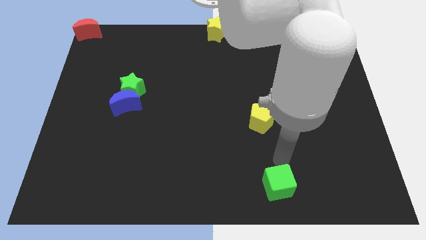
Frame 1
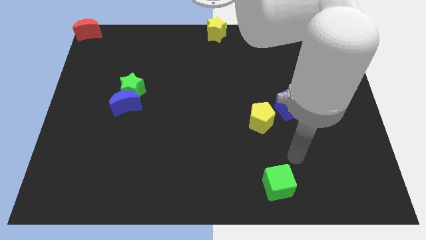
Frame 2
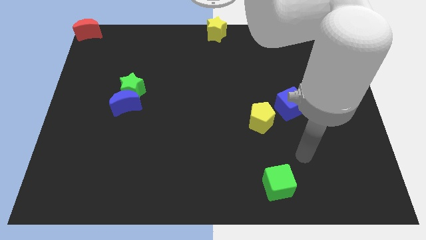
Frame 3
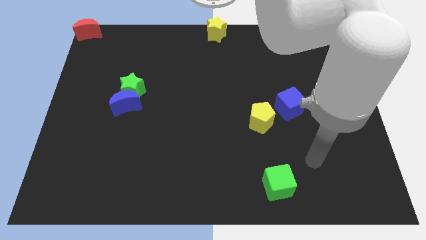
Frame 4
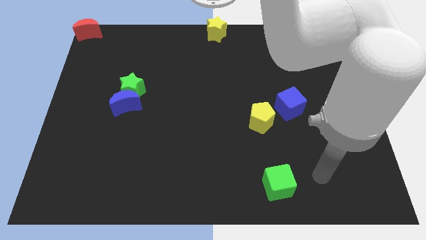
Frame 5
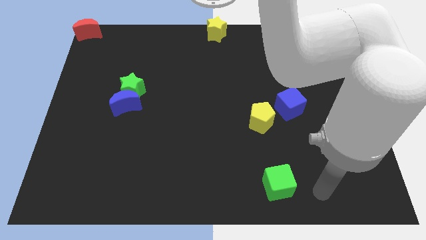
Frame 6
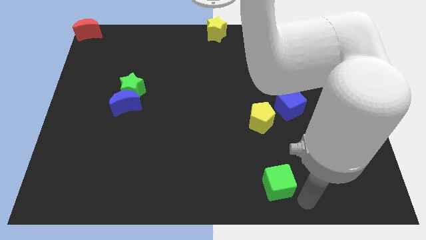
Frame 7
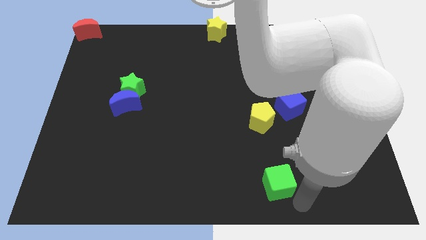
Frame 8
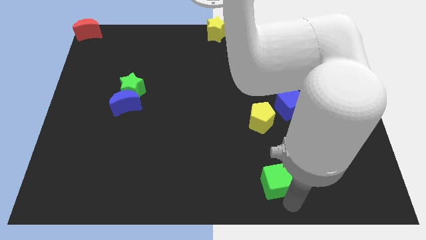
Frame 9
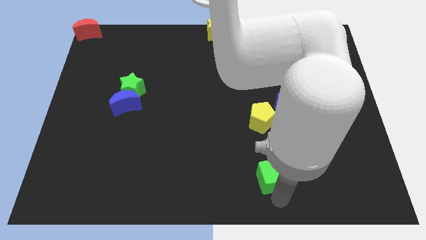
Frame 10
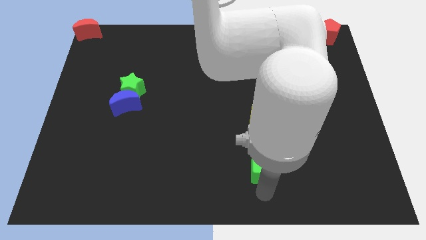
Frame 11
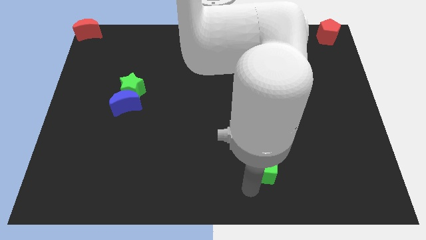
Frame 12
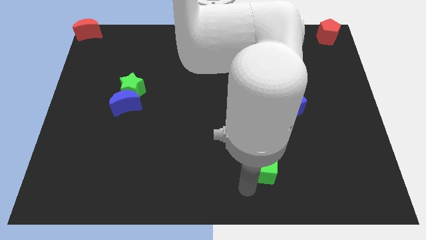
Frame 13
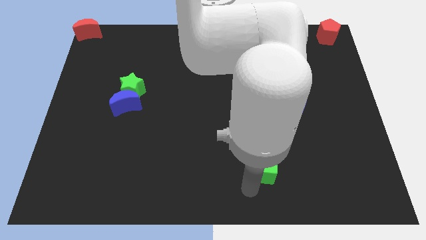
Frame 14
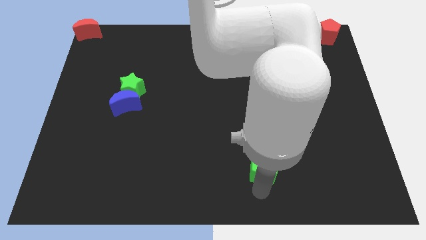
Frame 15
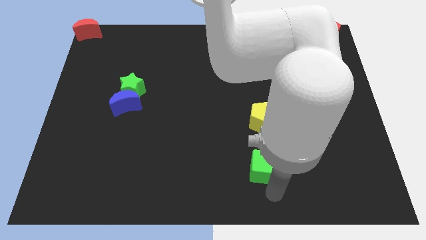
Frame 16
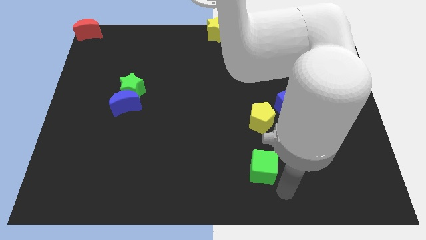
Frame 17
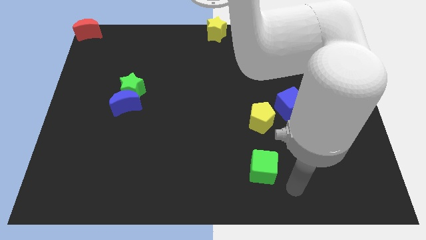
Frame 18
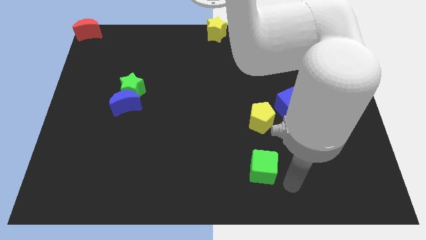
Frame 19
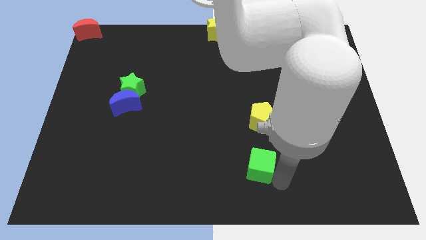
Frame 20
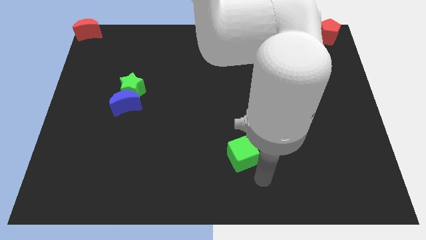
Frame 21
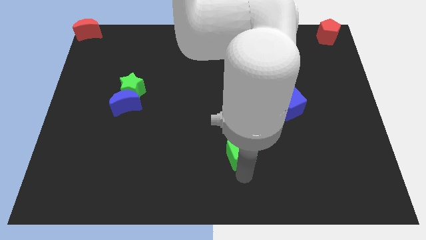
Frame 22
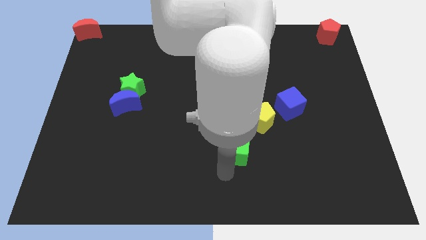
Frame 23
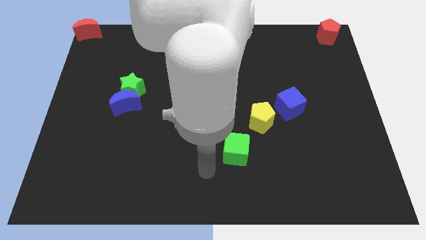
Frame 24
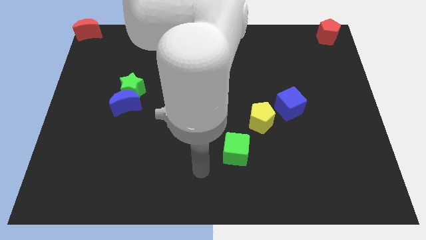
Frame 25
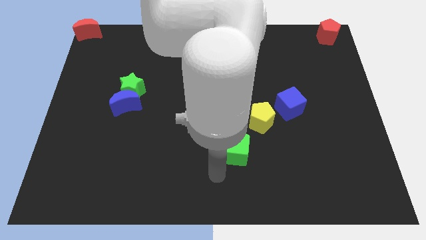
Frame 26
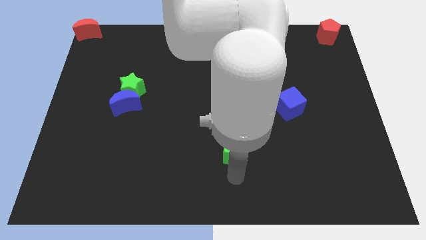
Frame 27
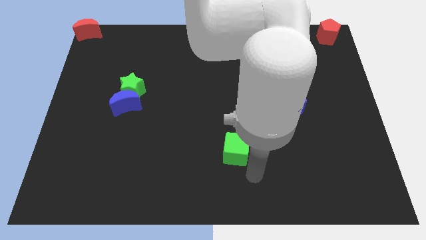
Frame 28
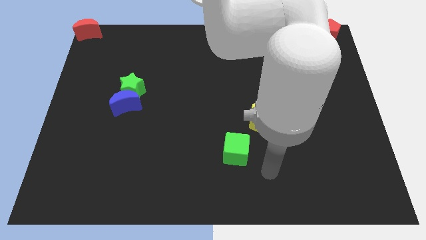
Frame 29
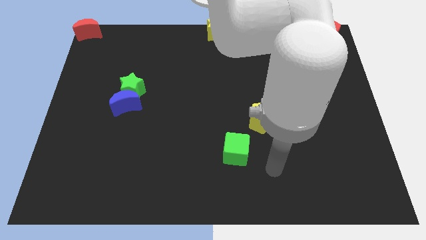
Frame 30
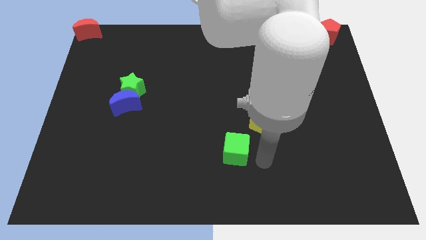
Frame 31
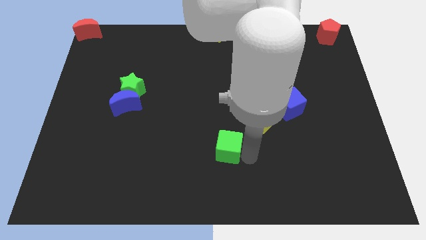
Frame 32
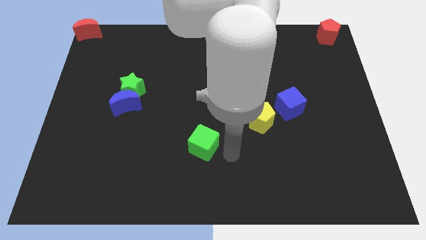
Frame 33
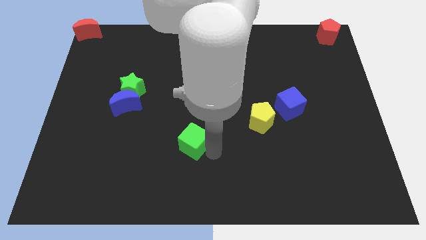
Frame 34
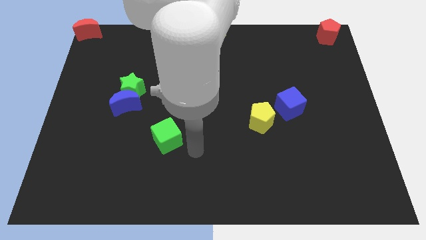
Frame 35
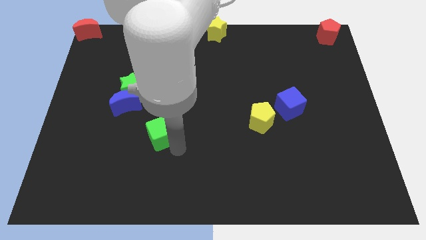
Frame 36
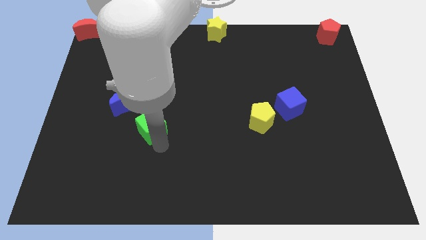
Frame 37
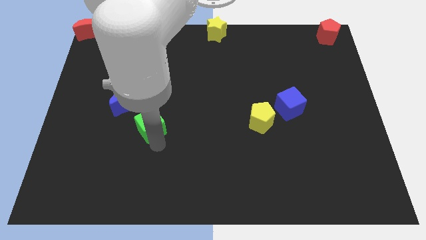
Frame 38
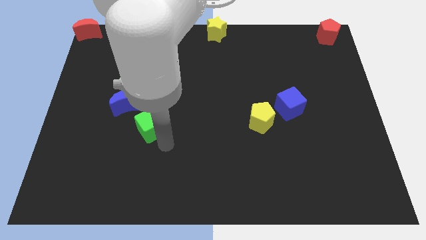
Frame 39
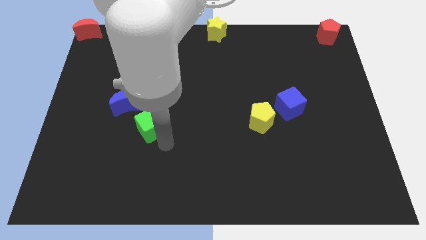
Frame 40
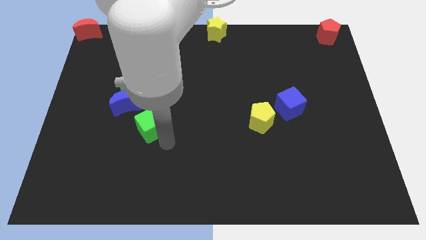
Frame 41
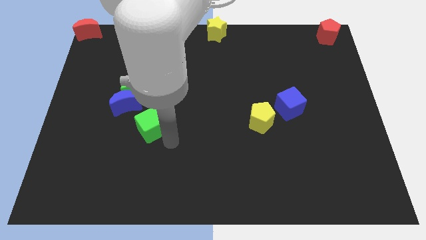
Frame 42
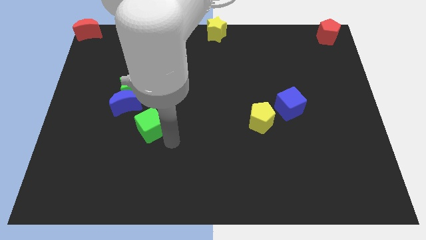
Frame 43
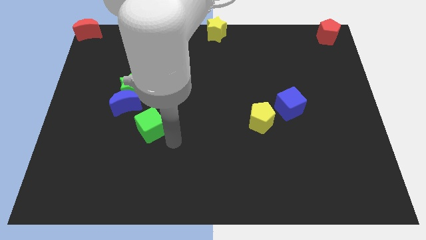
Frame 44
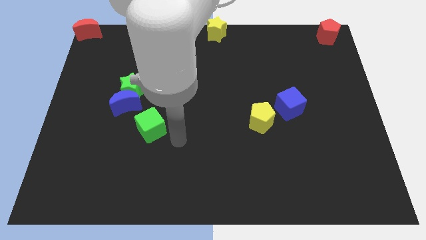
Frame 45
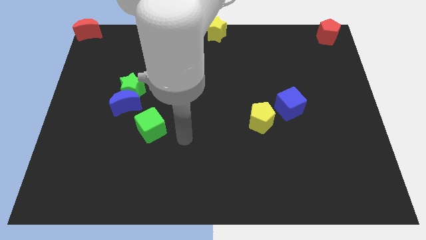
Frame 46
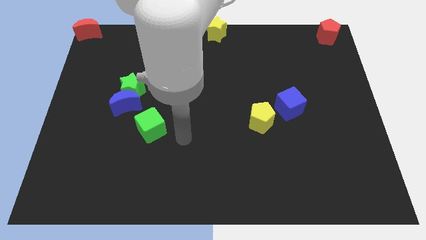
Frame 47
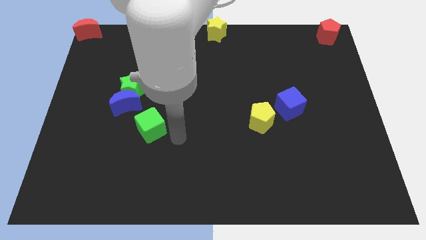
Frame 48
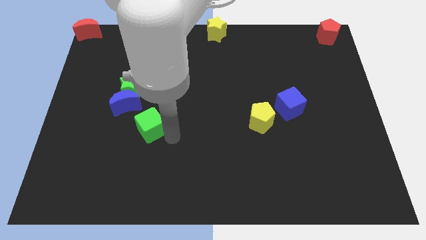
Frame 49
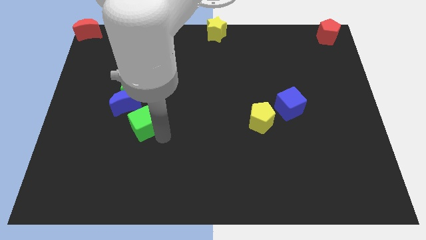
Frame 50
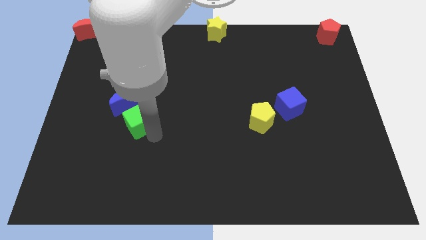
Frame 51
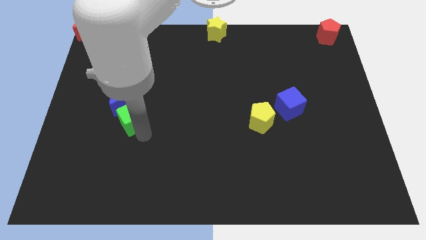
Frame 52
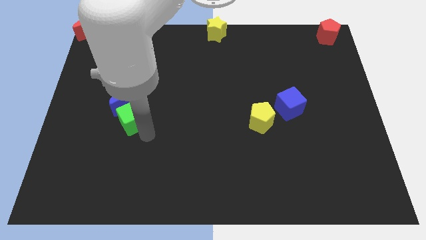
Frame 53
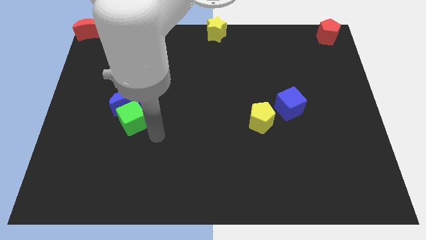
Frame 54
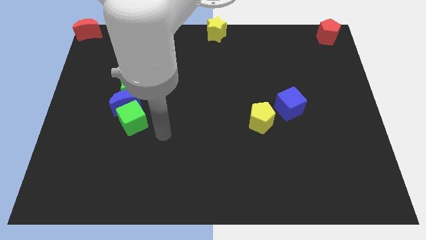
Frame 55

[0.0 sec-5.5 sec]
push the green cube to the bottom of the blue crescent

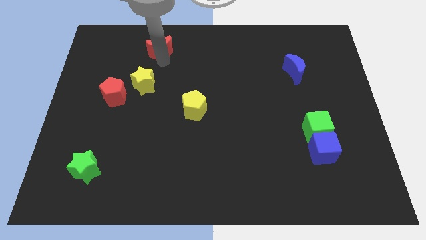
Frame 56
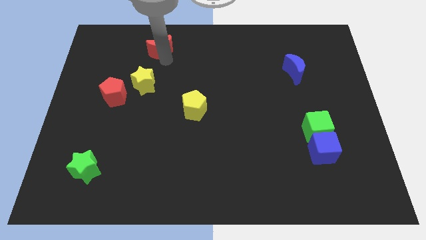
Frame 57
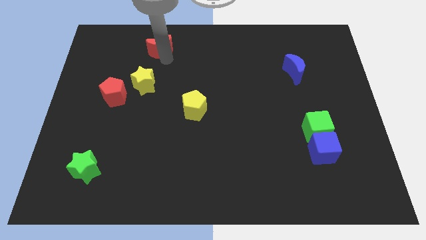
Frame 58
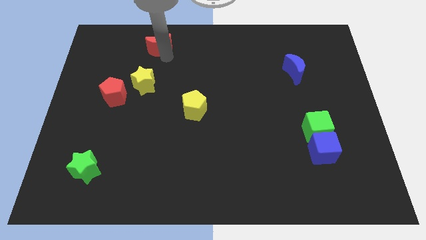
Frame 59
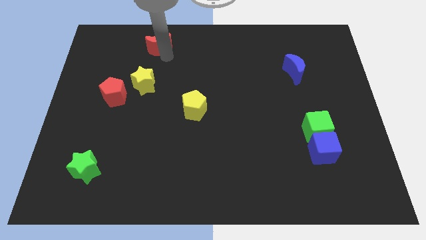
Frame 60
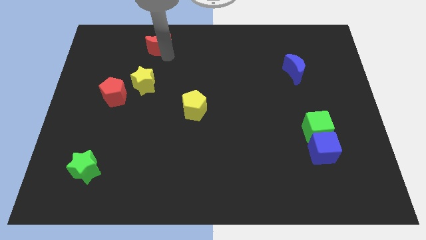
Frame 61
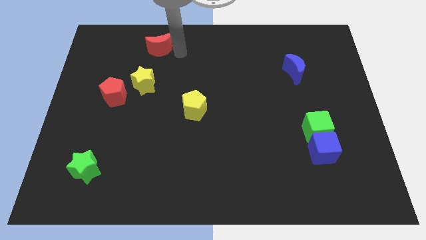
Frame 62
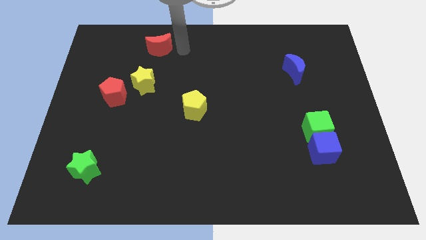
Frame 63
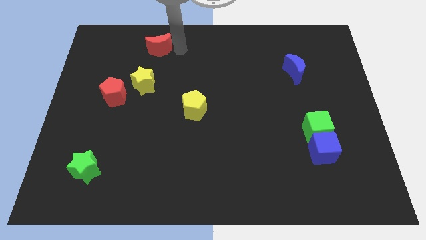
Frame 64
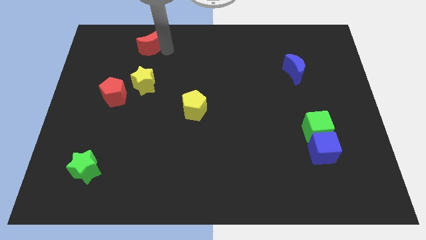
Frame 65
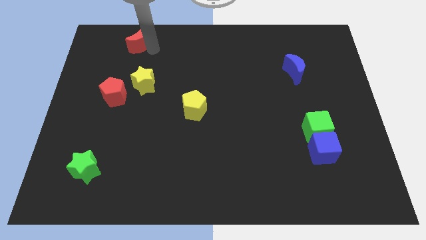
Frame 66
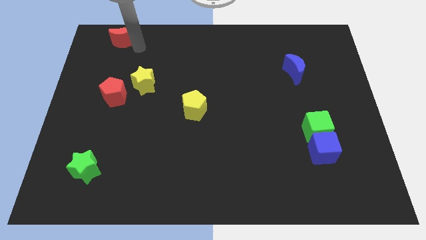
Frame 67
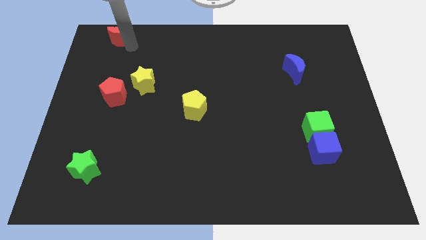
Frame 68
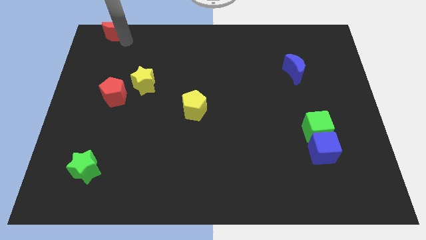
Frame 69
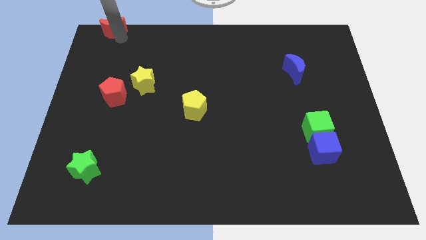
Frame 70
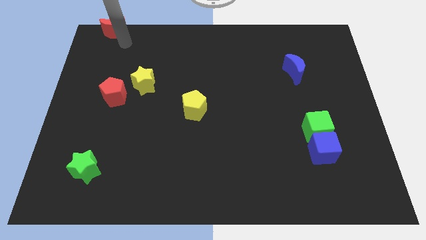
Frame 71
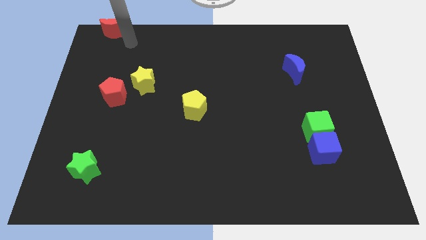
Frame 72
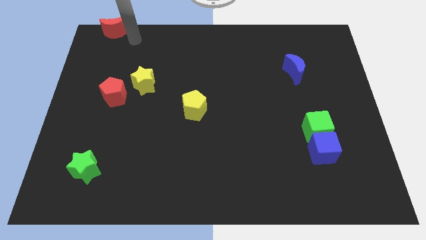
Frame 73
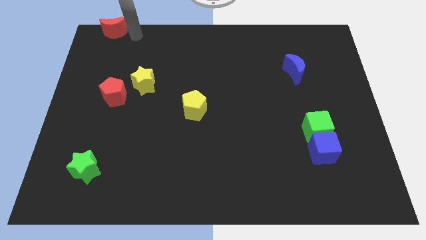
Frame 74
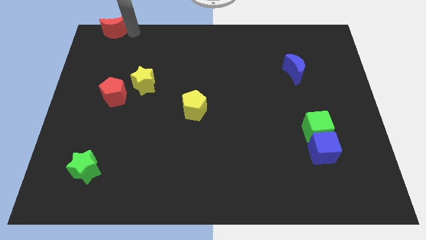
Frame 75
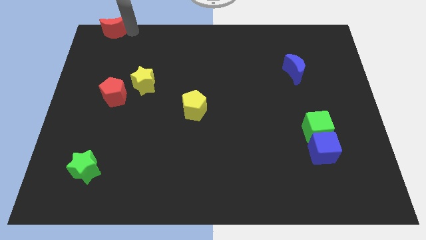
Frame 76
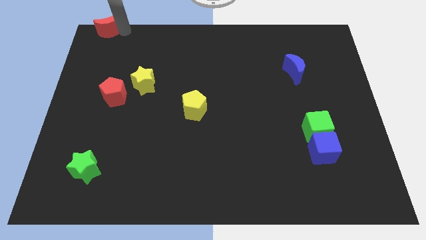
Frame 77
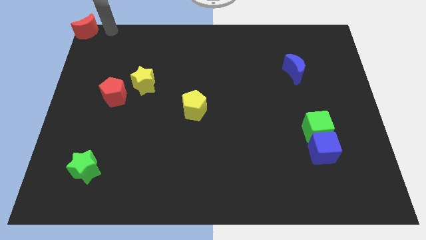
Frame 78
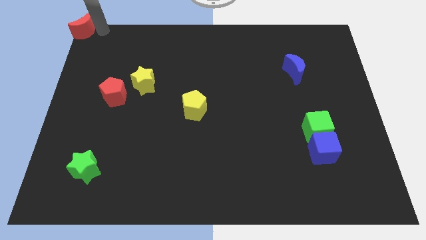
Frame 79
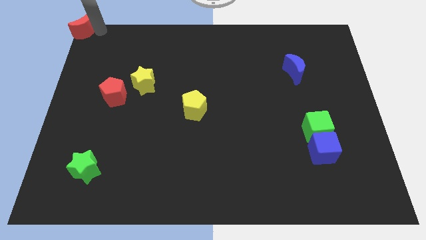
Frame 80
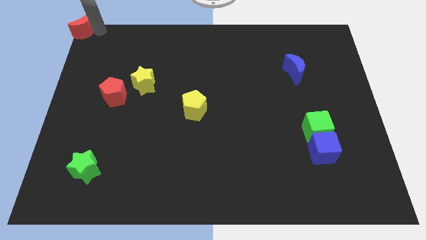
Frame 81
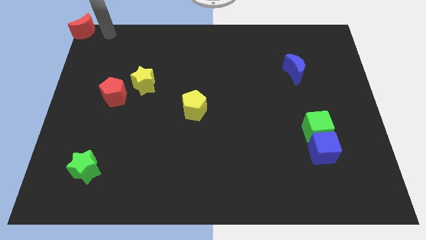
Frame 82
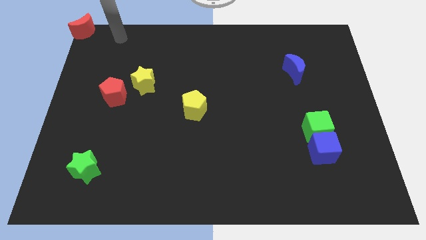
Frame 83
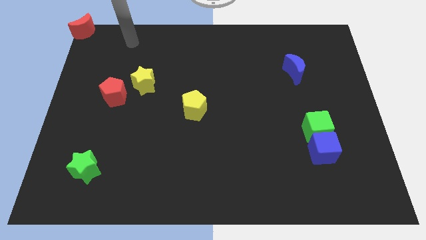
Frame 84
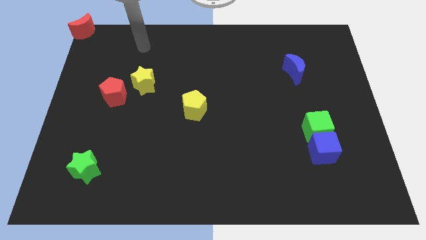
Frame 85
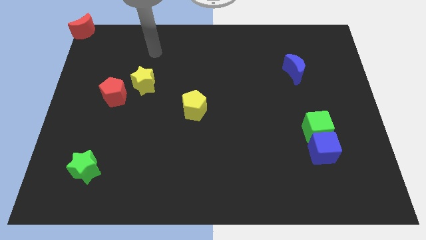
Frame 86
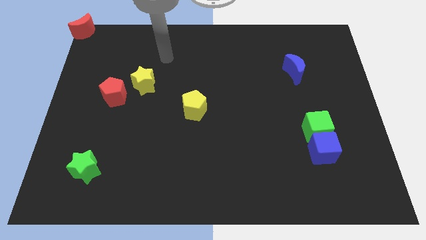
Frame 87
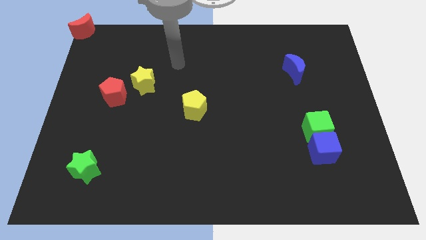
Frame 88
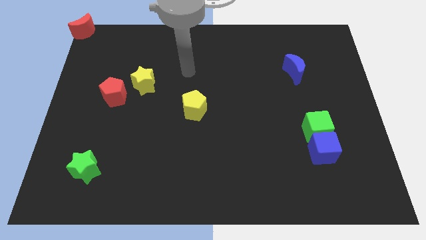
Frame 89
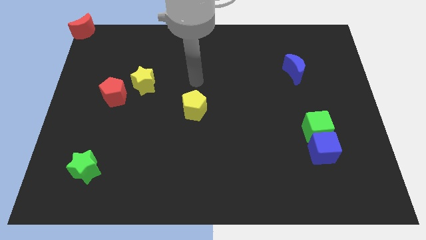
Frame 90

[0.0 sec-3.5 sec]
put the red moon at the top left corner of the board
